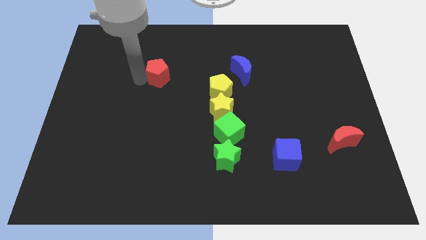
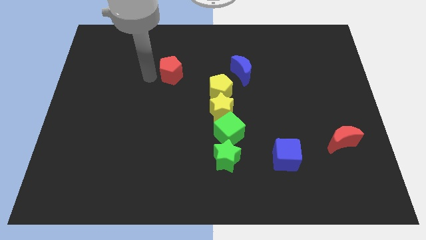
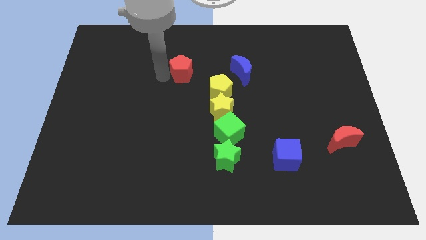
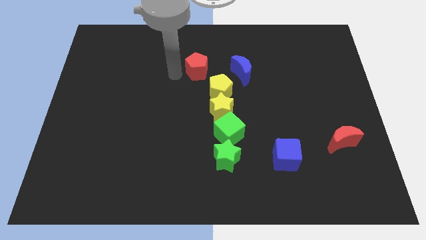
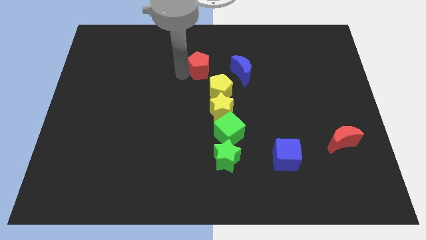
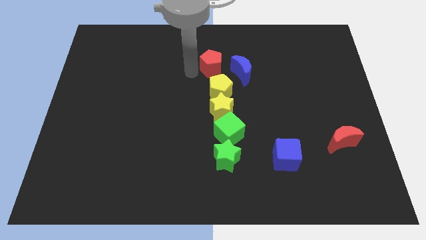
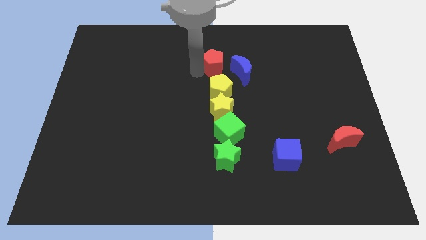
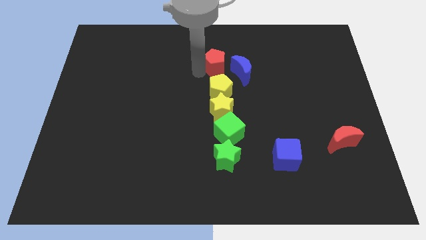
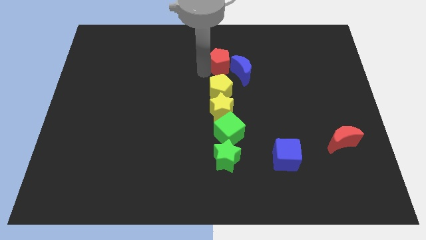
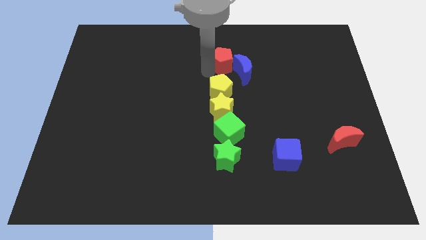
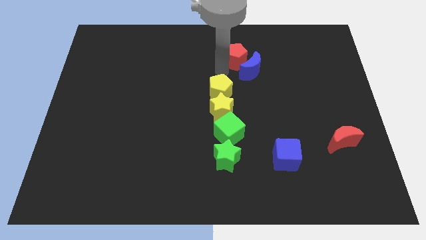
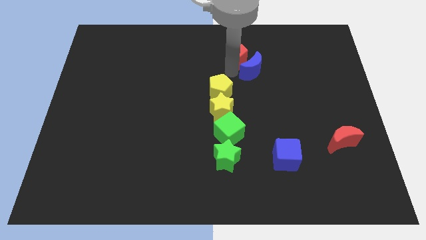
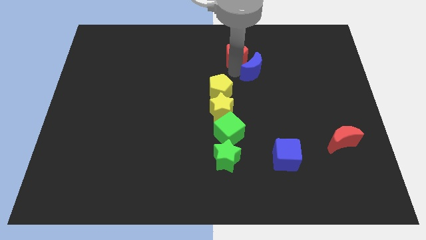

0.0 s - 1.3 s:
push the blue crescent with red pentagon

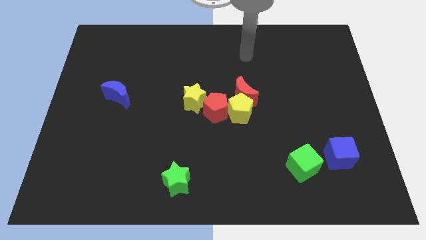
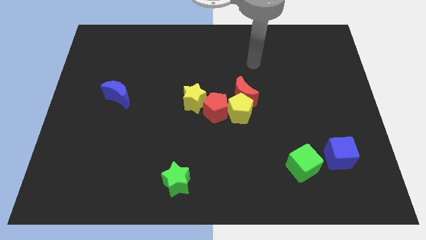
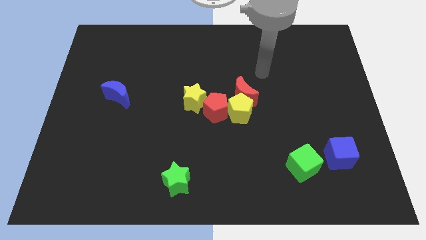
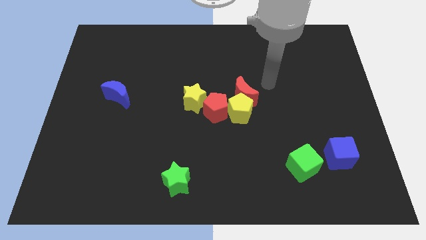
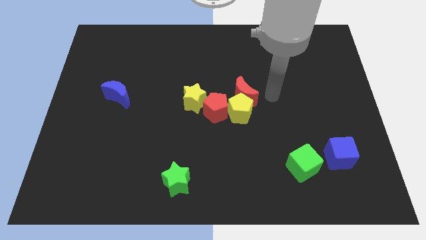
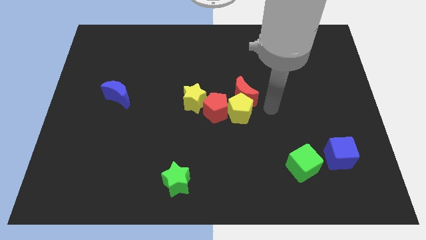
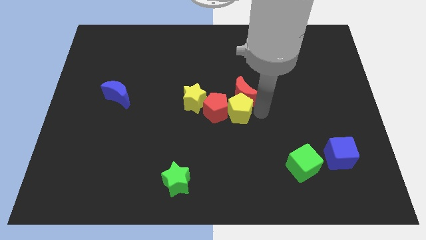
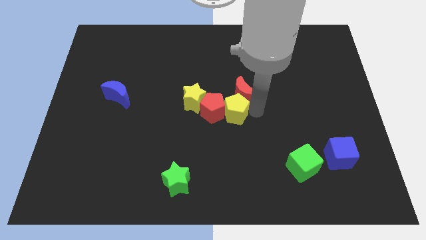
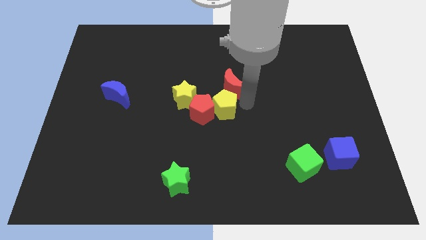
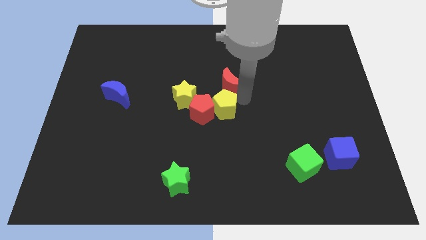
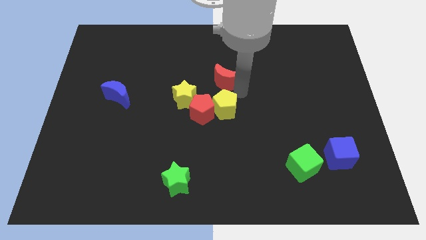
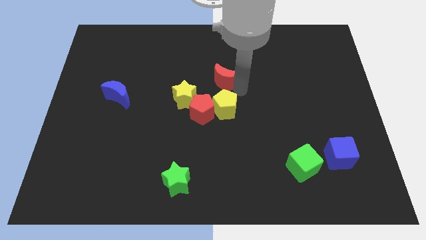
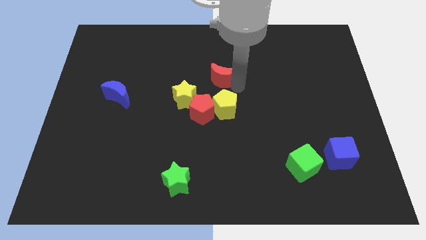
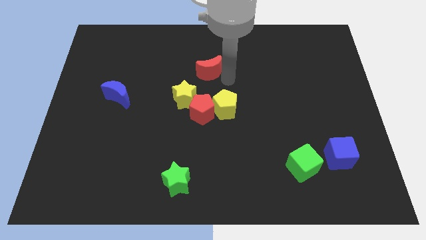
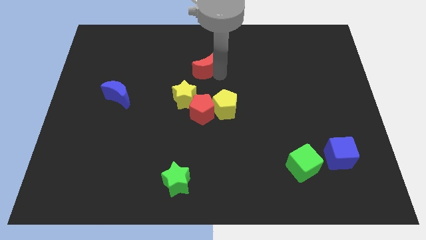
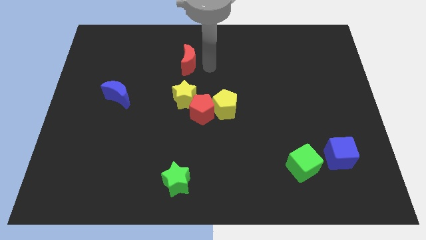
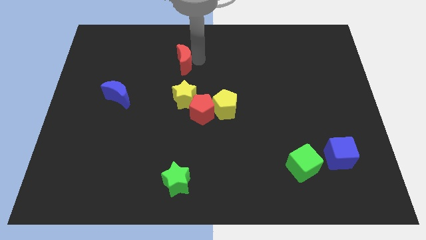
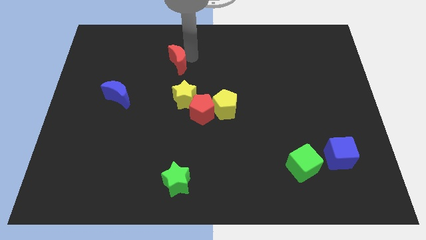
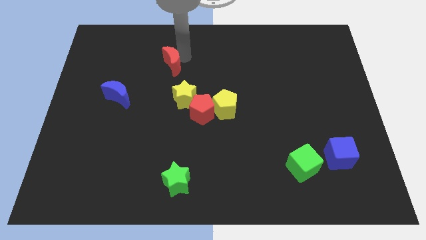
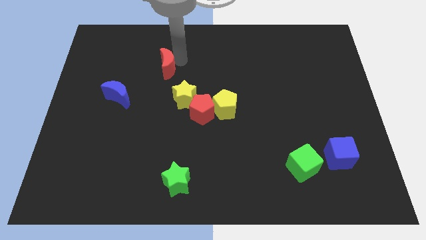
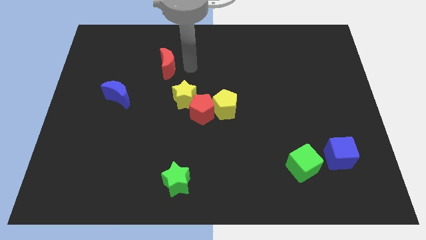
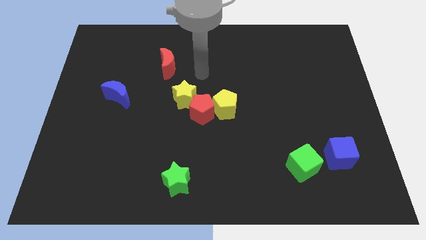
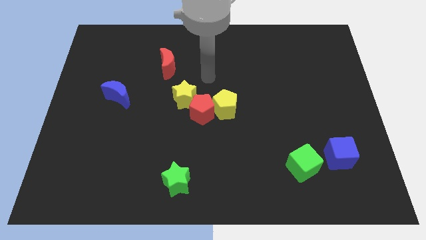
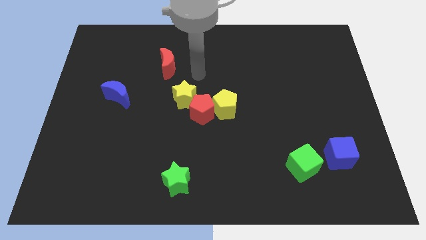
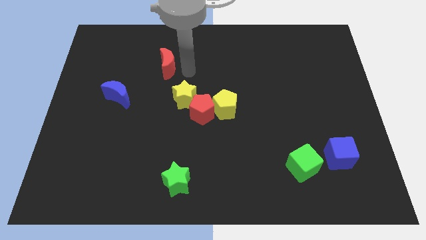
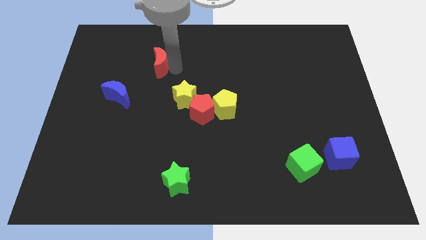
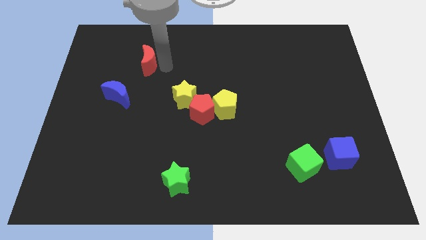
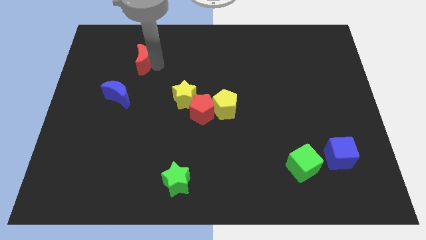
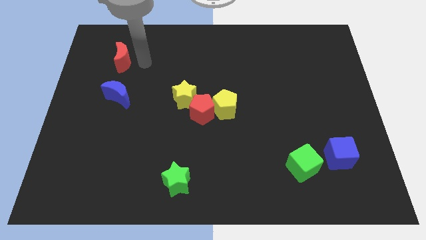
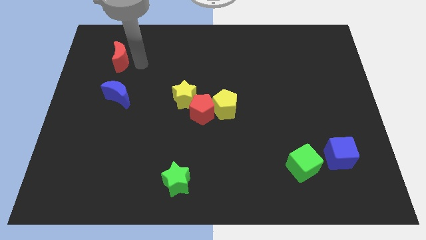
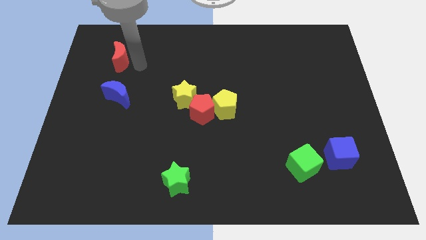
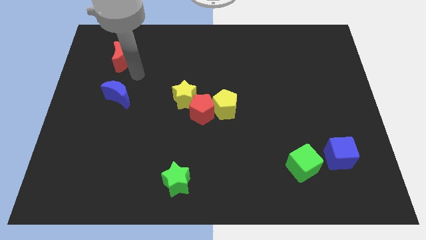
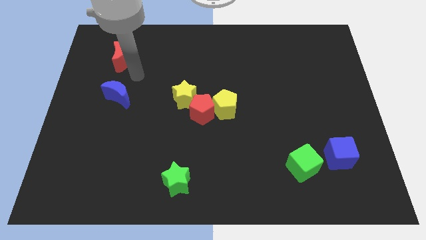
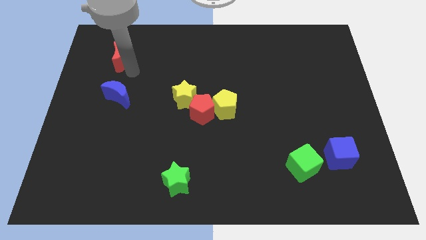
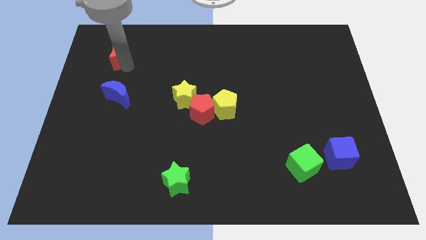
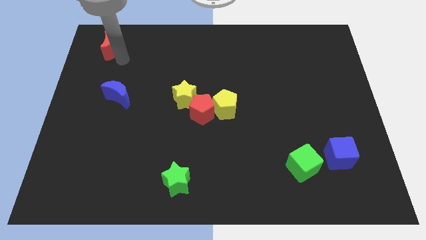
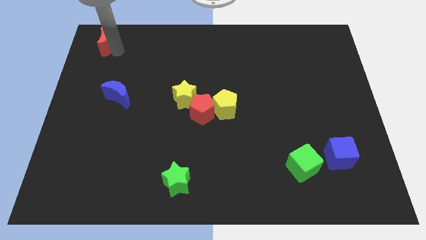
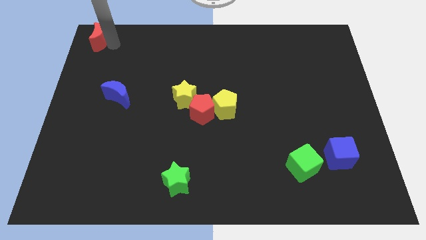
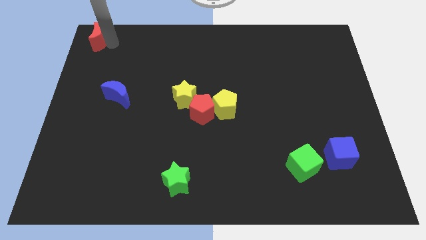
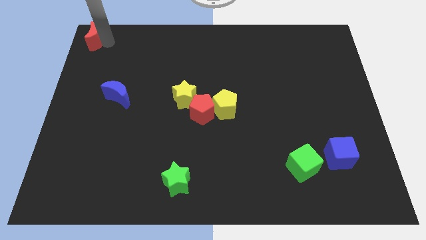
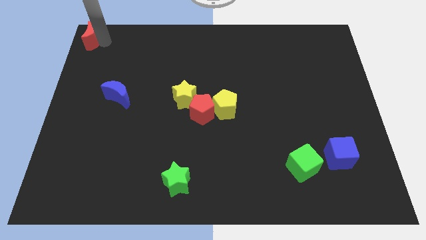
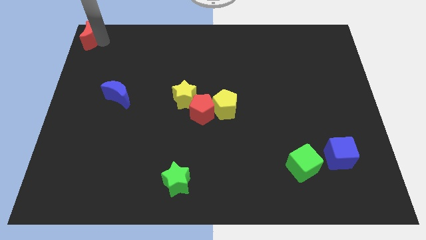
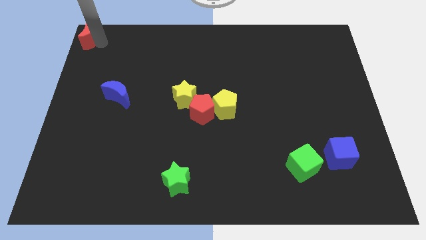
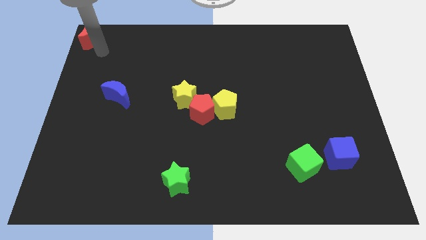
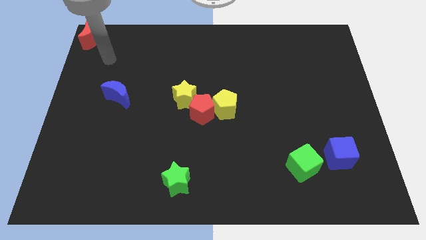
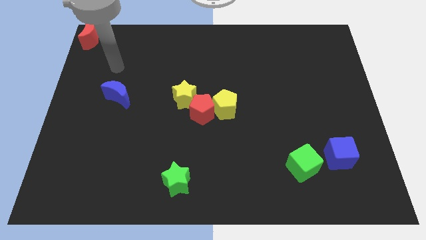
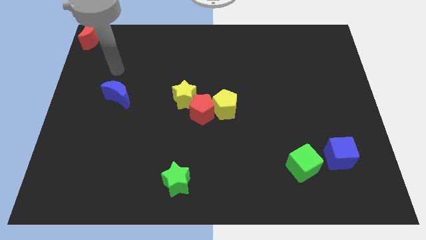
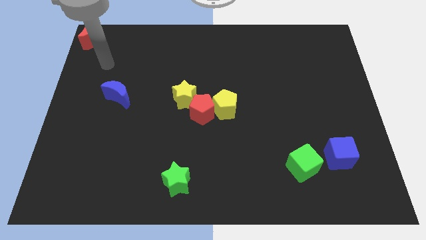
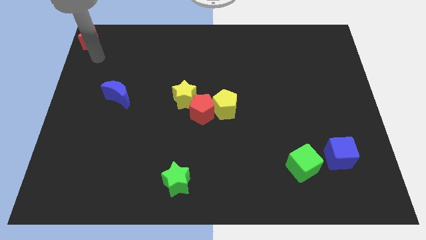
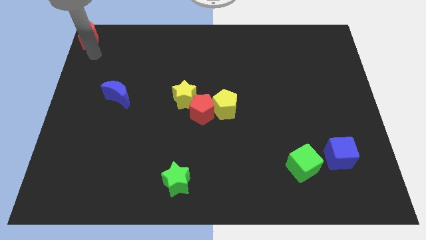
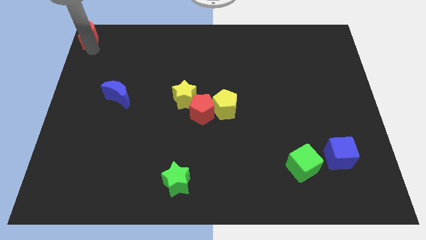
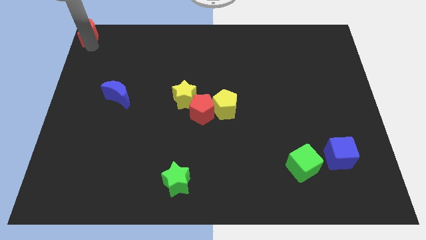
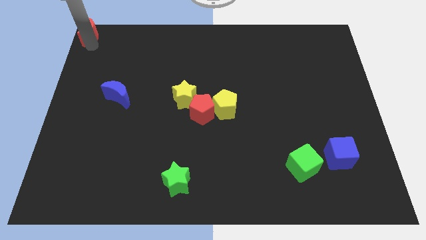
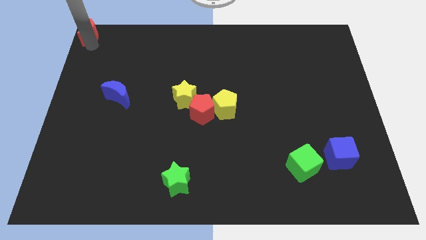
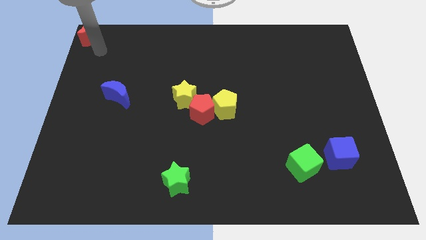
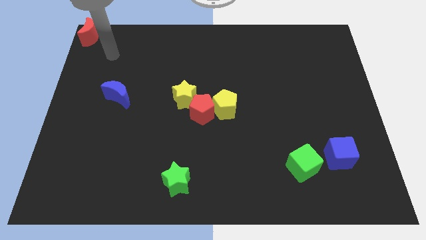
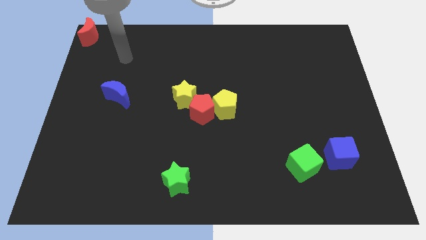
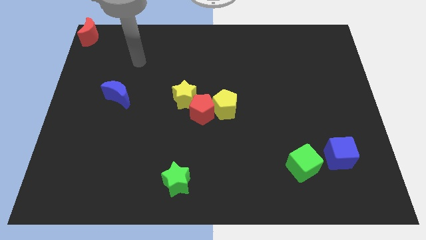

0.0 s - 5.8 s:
drag the red crescent to the top left of the board

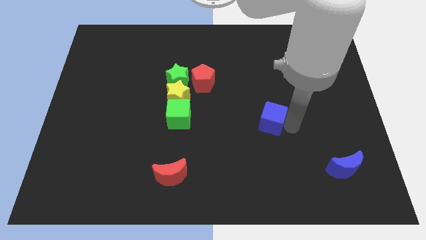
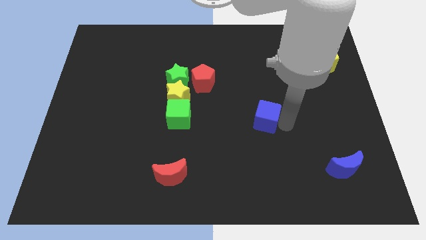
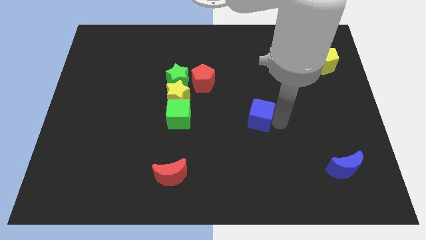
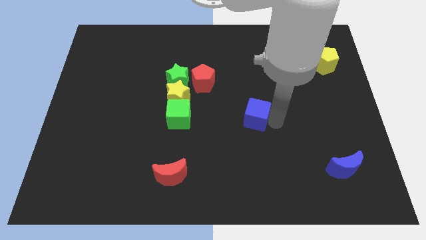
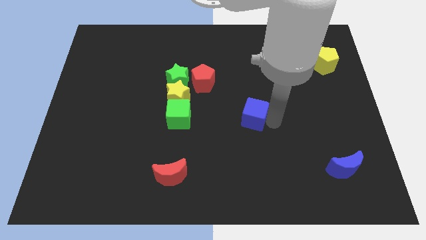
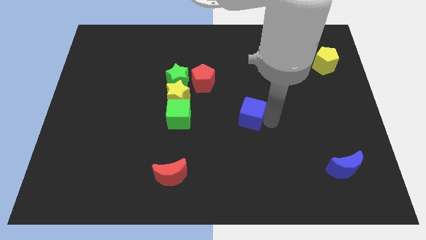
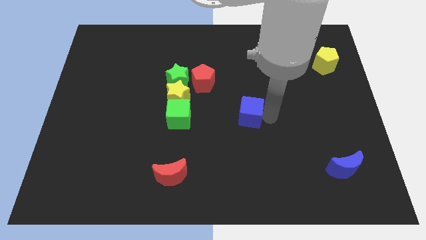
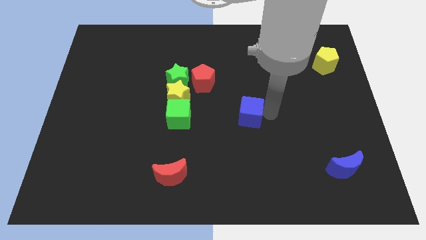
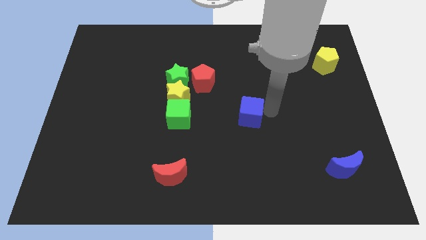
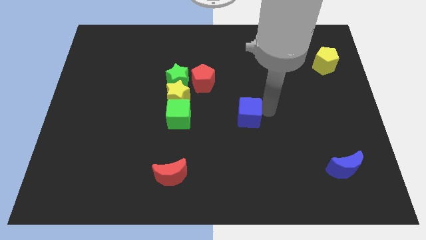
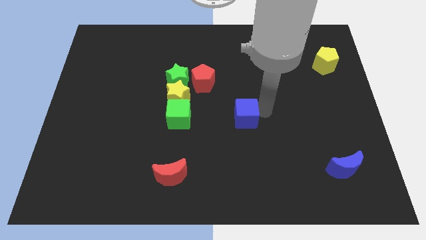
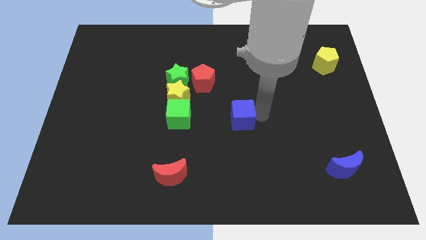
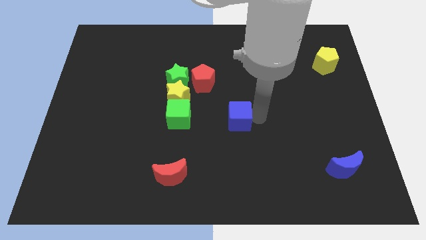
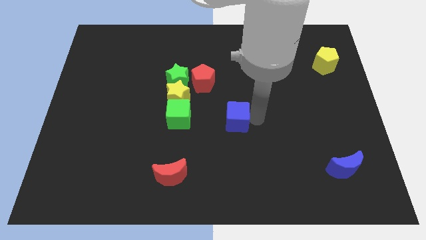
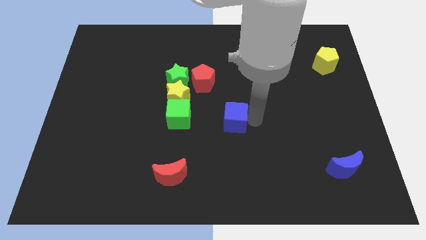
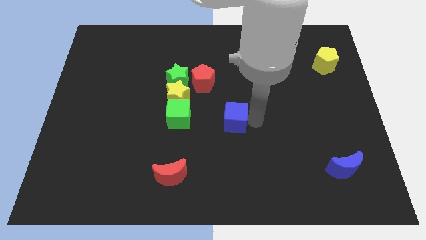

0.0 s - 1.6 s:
push the blue cube to the center of the board

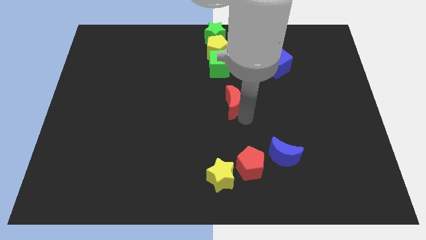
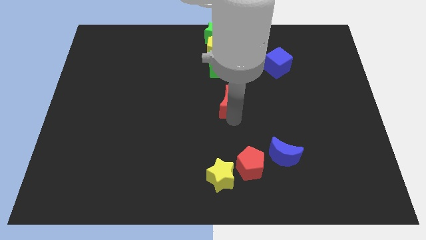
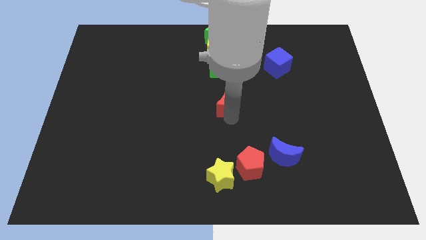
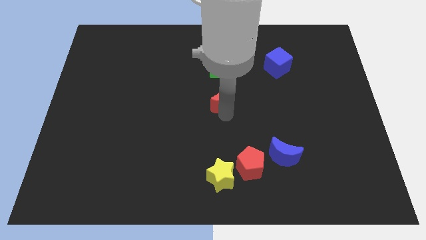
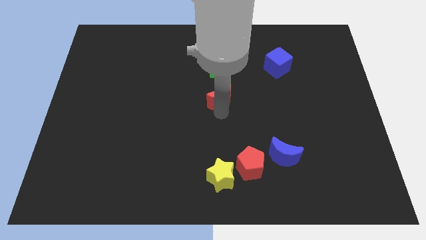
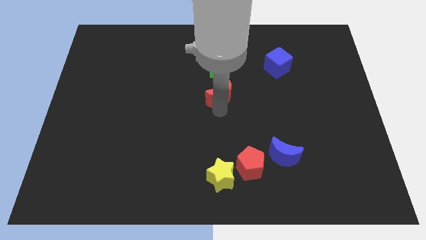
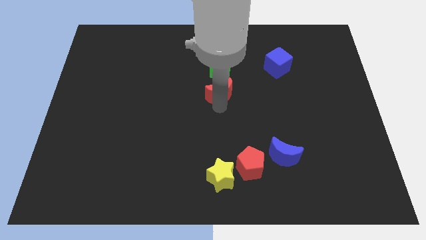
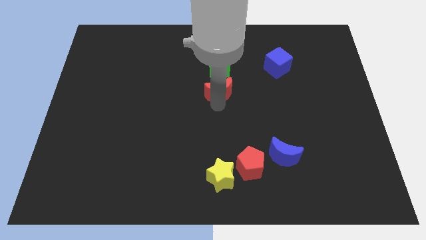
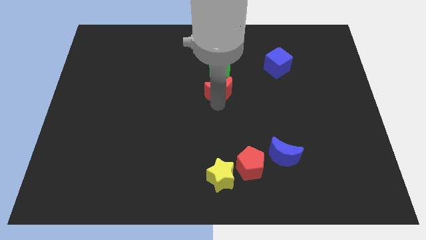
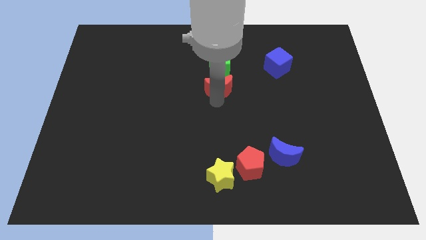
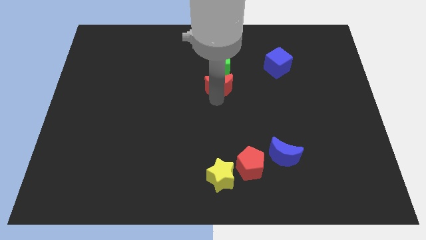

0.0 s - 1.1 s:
place the red crescent below the green cube
